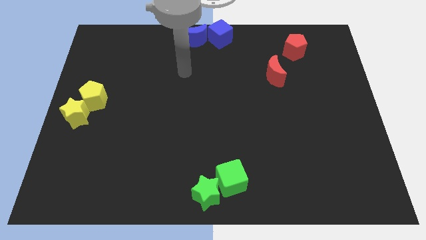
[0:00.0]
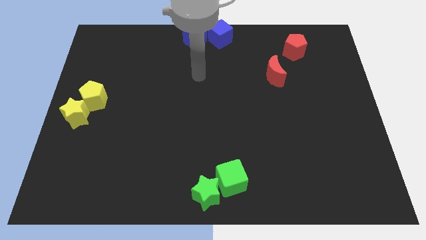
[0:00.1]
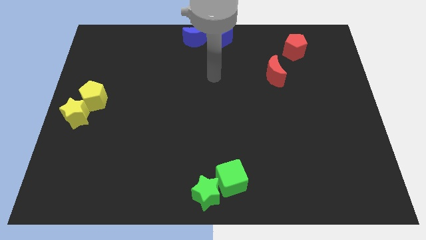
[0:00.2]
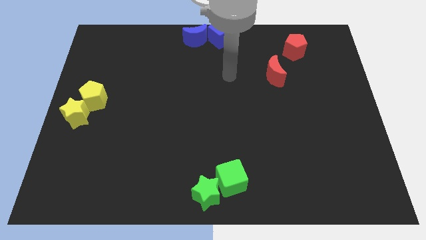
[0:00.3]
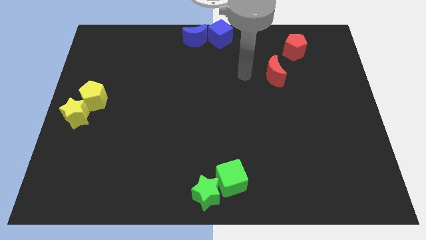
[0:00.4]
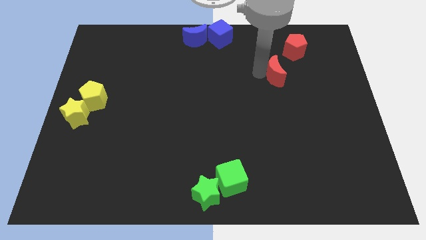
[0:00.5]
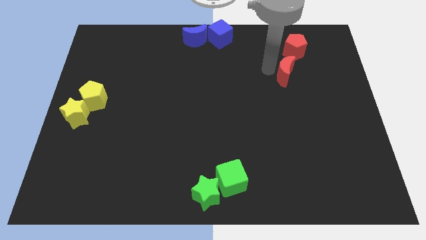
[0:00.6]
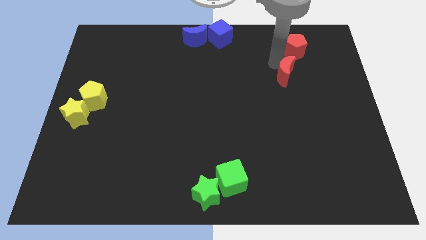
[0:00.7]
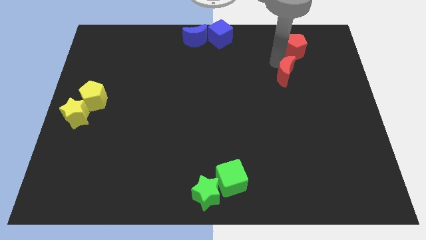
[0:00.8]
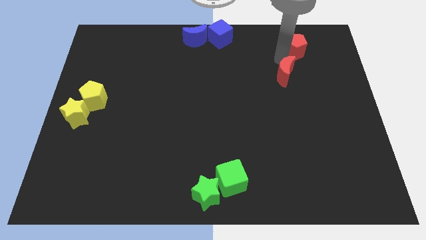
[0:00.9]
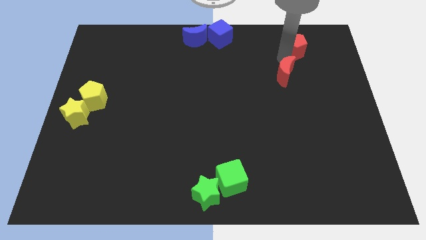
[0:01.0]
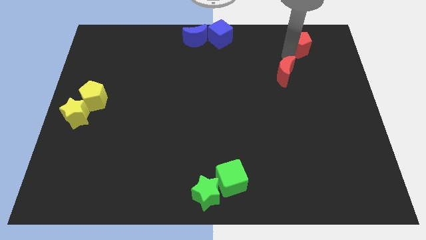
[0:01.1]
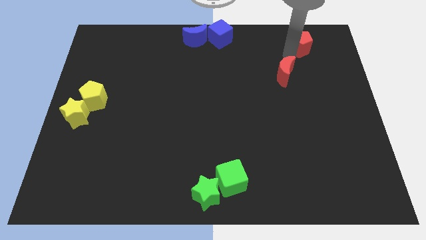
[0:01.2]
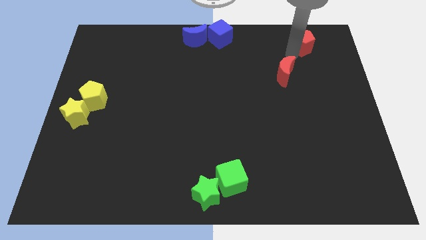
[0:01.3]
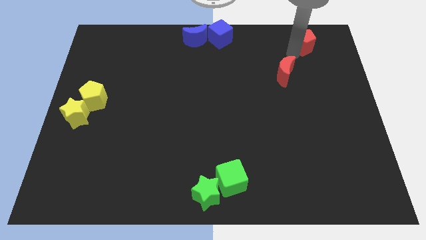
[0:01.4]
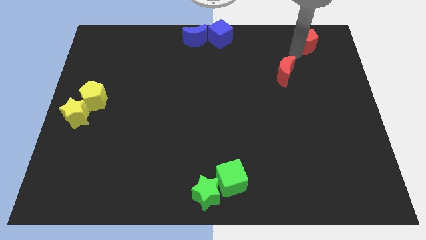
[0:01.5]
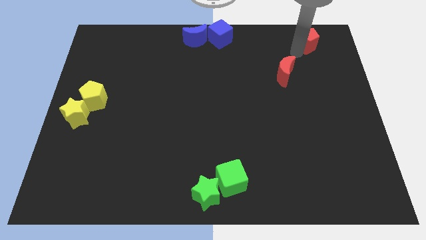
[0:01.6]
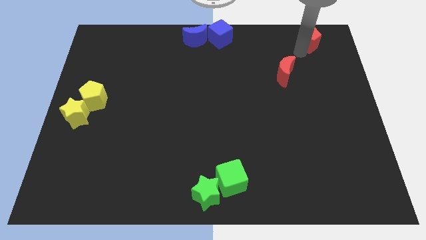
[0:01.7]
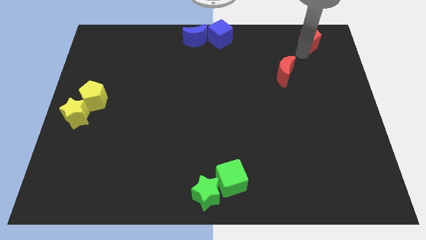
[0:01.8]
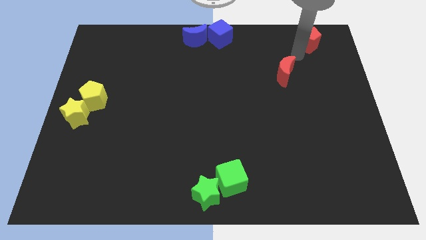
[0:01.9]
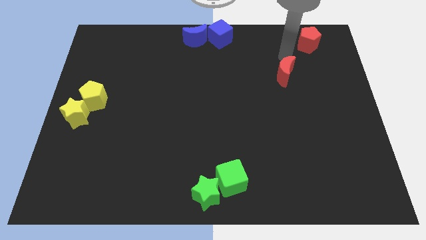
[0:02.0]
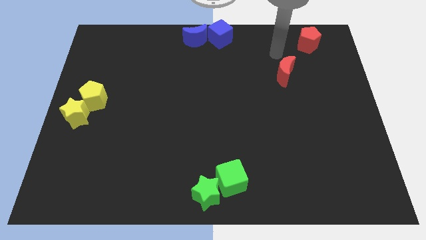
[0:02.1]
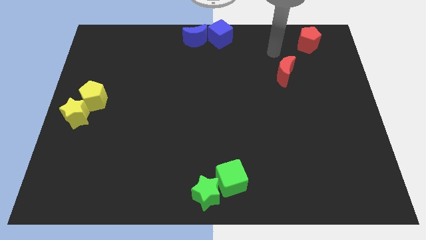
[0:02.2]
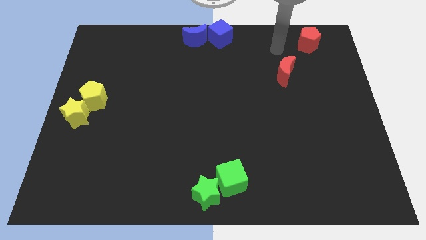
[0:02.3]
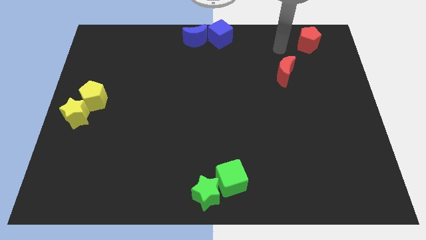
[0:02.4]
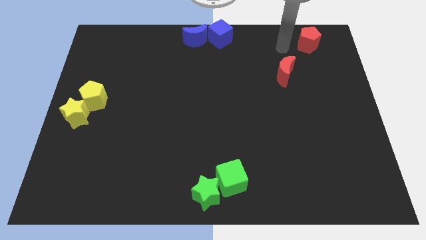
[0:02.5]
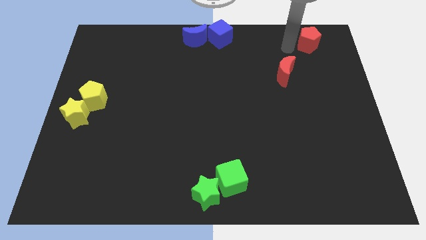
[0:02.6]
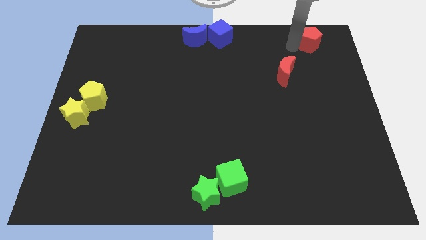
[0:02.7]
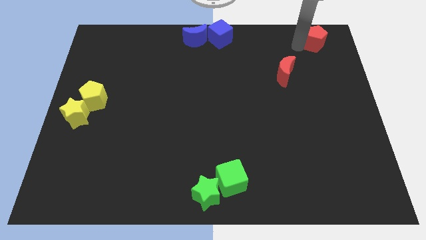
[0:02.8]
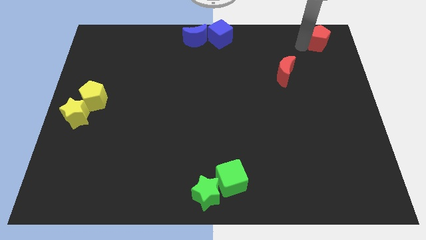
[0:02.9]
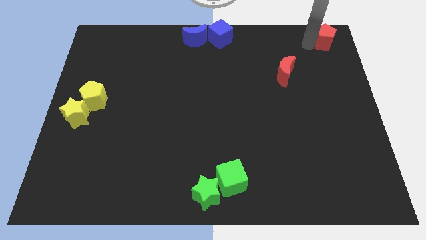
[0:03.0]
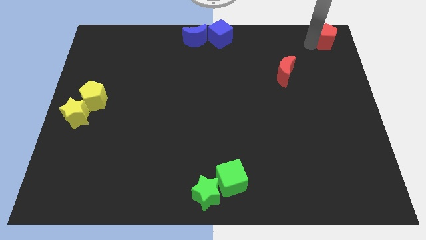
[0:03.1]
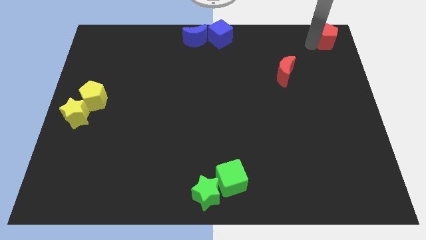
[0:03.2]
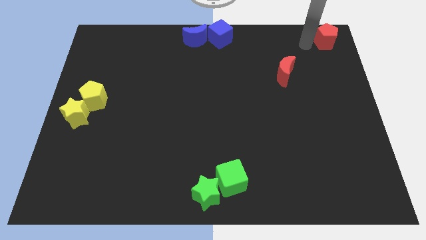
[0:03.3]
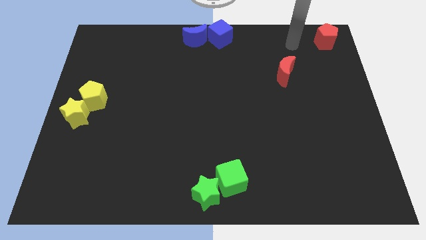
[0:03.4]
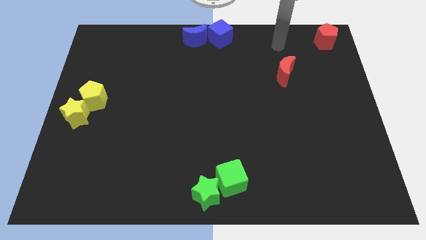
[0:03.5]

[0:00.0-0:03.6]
move the red crescent to the top right side corner

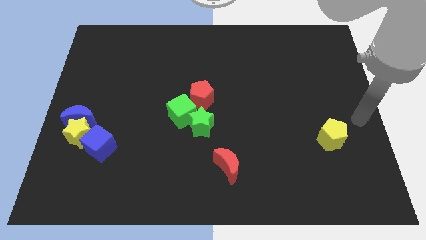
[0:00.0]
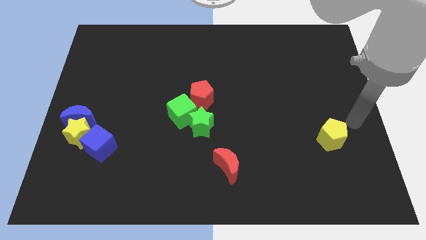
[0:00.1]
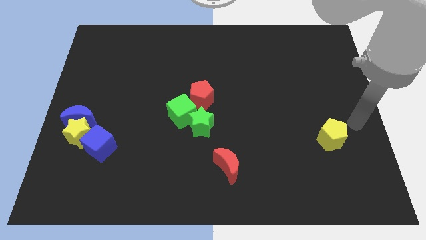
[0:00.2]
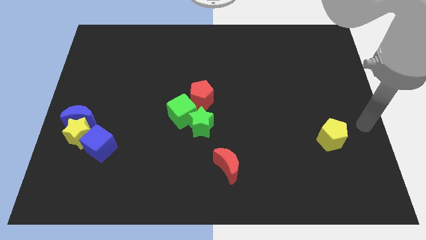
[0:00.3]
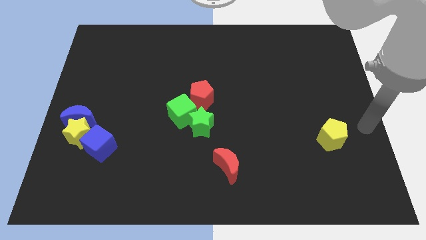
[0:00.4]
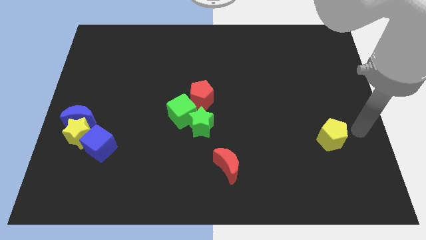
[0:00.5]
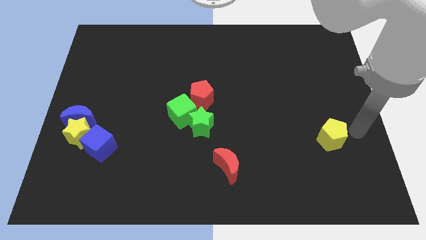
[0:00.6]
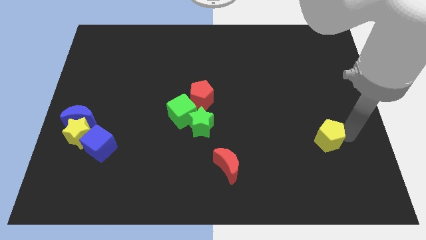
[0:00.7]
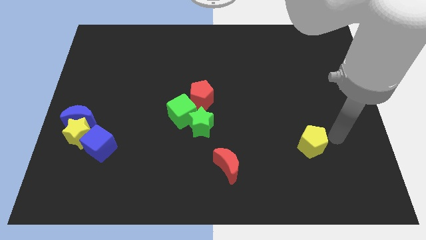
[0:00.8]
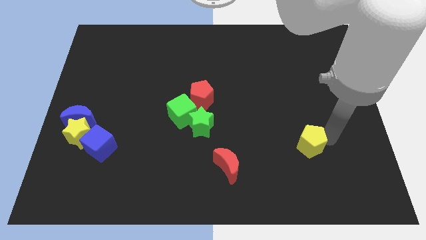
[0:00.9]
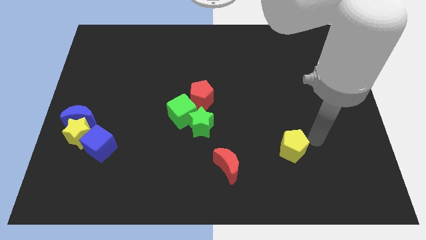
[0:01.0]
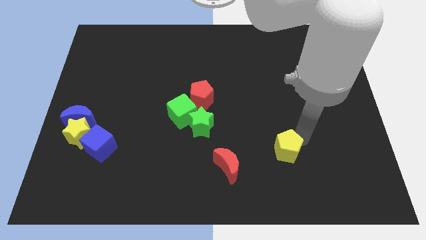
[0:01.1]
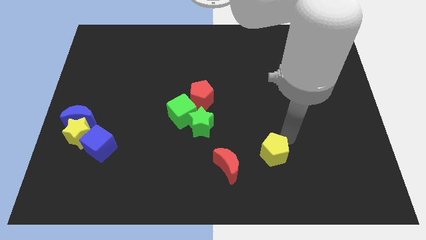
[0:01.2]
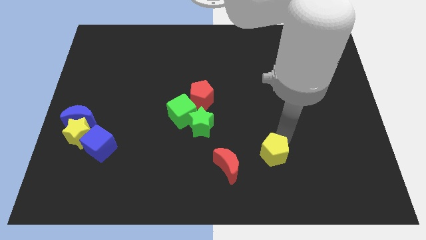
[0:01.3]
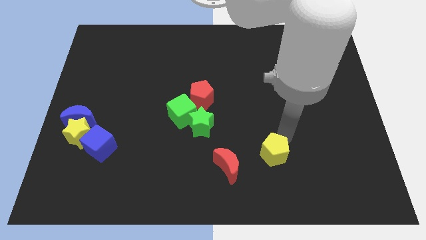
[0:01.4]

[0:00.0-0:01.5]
push the yellow pentagon closer to the red moon

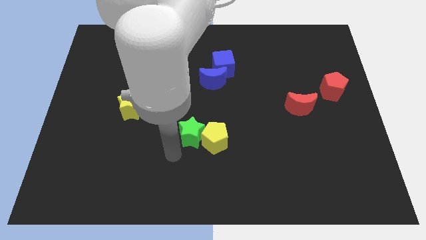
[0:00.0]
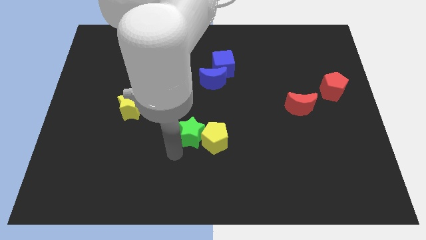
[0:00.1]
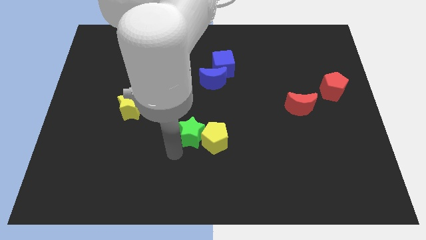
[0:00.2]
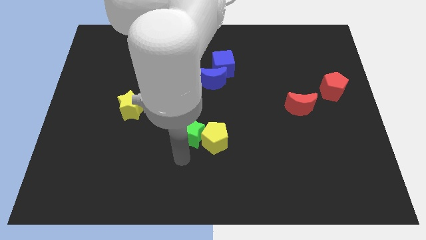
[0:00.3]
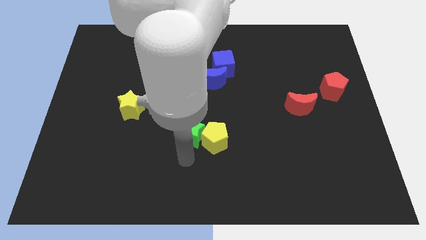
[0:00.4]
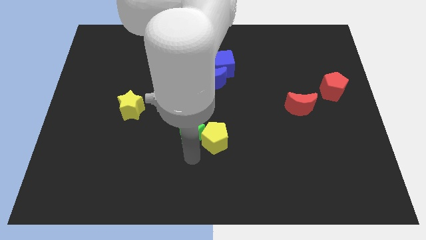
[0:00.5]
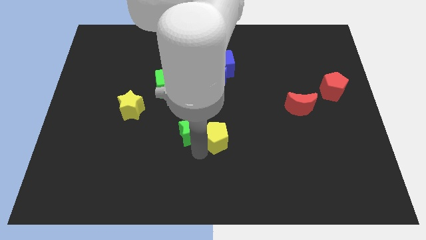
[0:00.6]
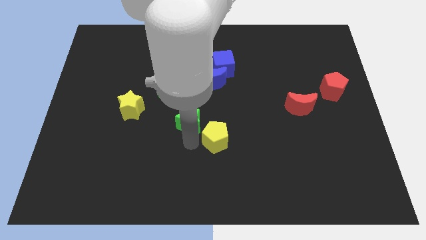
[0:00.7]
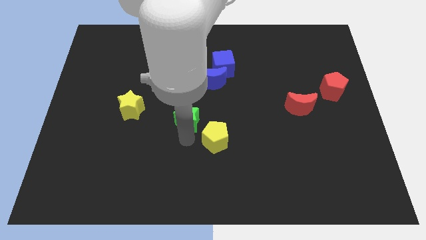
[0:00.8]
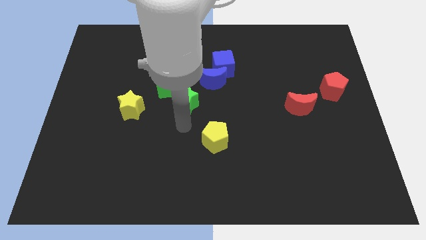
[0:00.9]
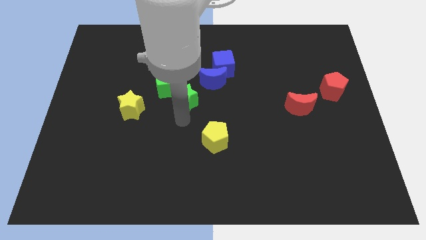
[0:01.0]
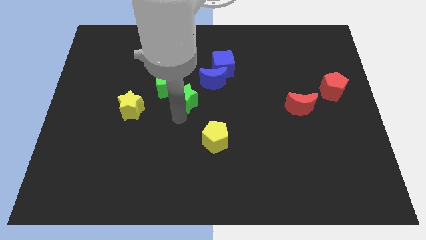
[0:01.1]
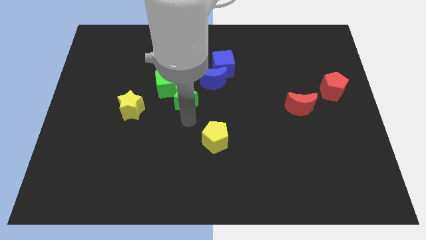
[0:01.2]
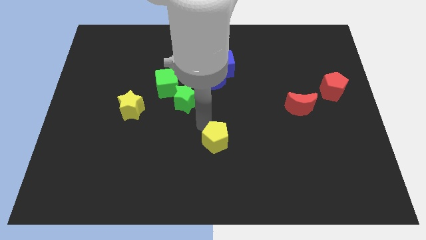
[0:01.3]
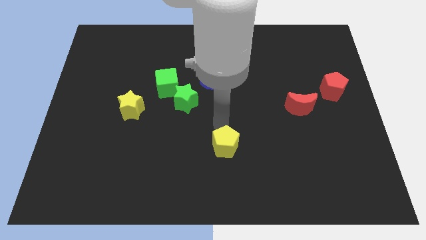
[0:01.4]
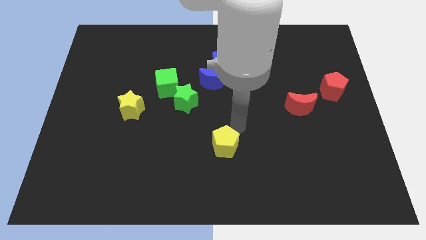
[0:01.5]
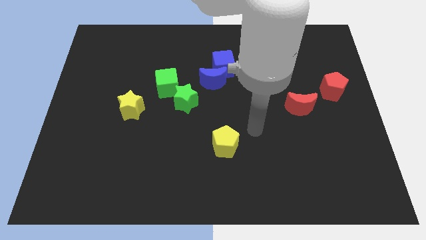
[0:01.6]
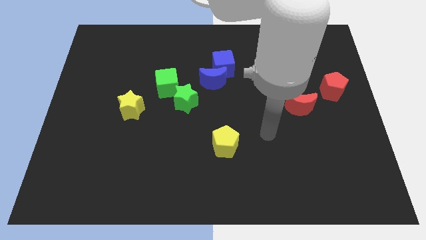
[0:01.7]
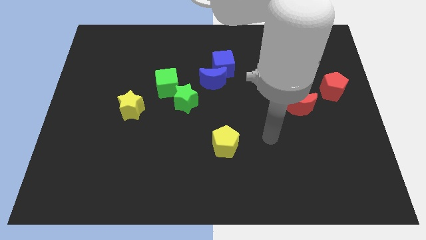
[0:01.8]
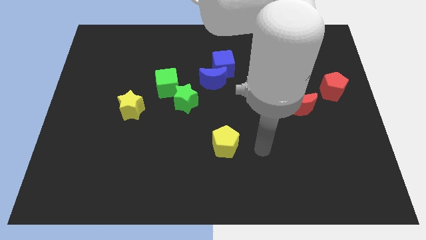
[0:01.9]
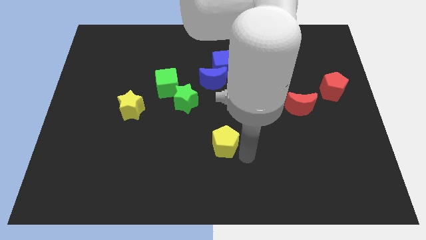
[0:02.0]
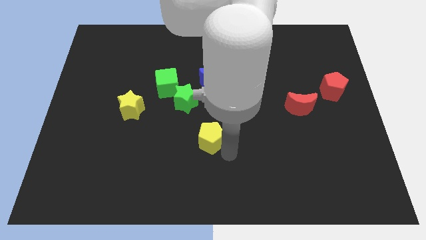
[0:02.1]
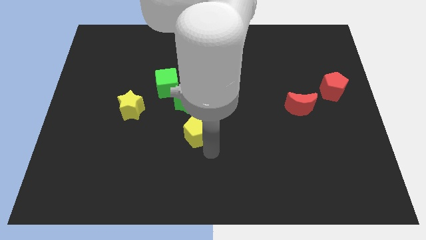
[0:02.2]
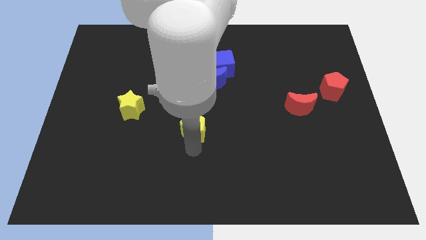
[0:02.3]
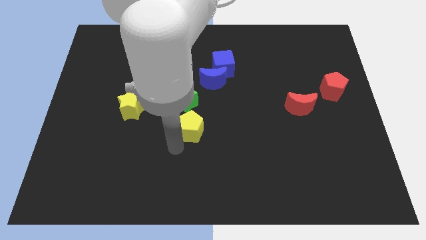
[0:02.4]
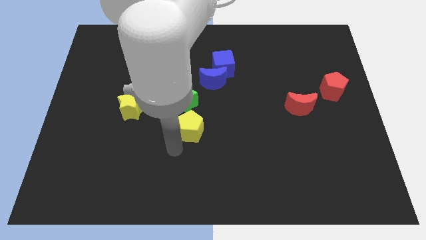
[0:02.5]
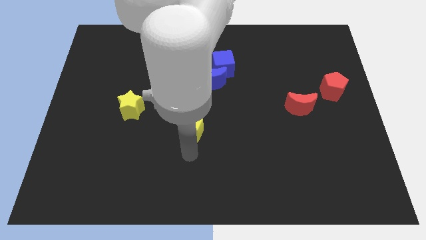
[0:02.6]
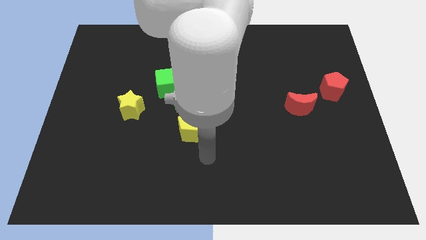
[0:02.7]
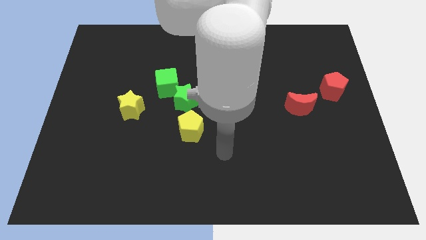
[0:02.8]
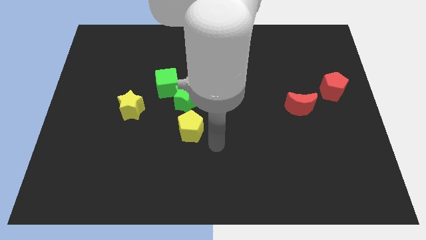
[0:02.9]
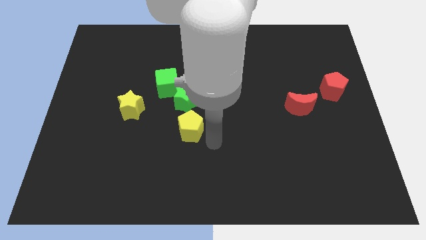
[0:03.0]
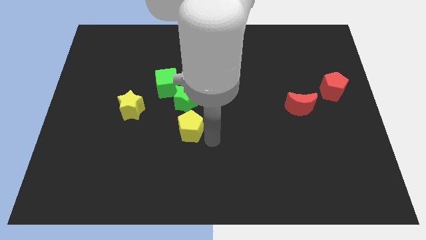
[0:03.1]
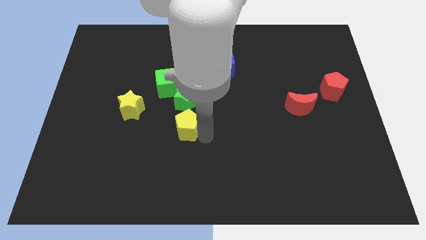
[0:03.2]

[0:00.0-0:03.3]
move the yellow pentagon towards the right to the green star

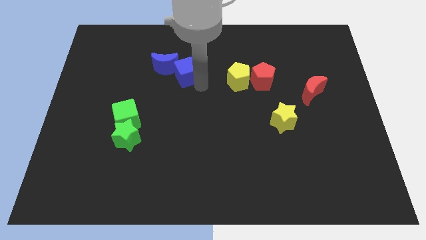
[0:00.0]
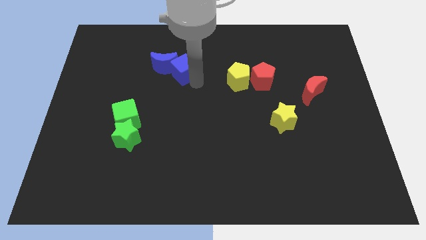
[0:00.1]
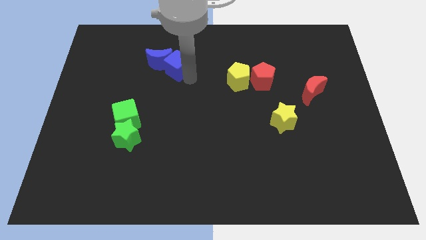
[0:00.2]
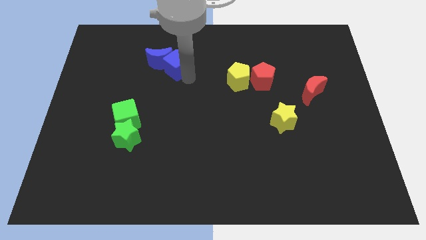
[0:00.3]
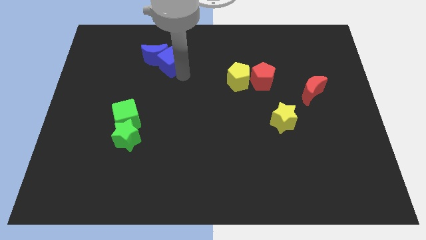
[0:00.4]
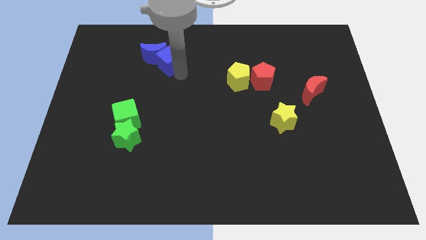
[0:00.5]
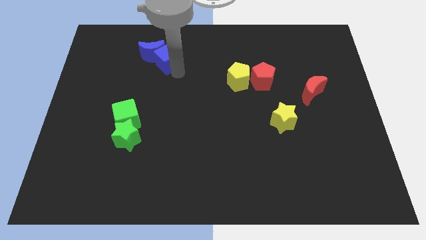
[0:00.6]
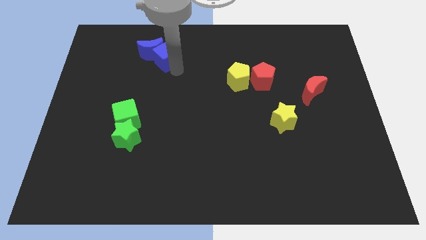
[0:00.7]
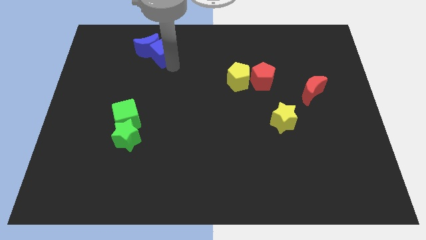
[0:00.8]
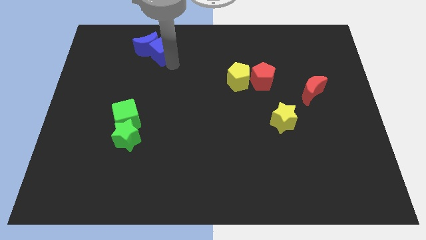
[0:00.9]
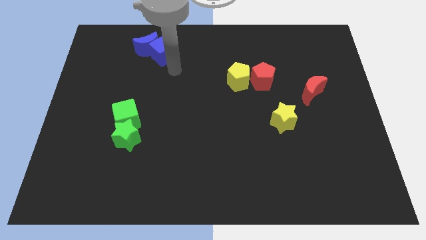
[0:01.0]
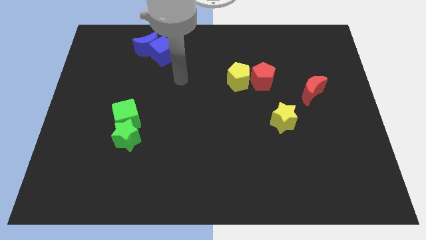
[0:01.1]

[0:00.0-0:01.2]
drag the blue clocks together slightly upwards
